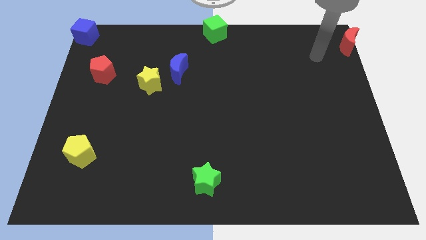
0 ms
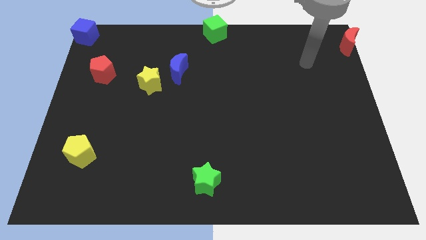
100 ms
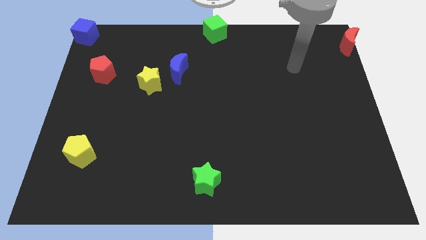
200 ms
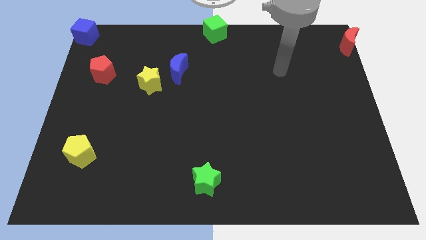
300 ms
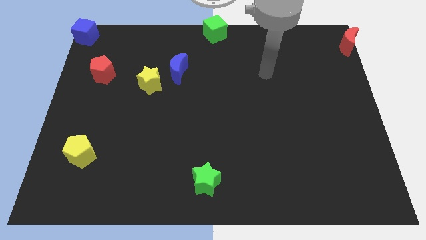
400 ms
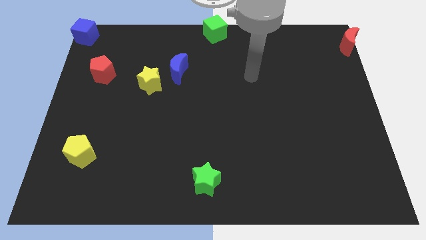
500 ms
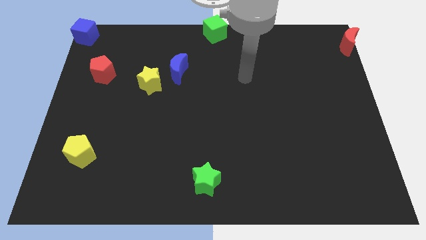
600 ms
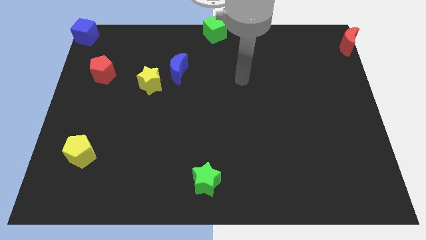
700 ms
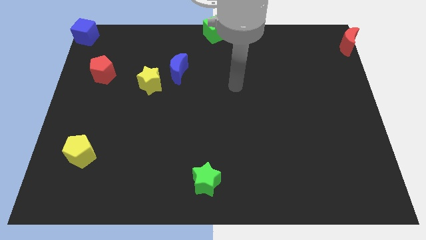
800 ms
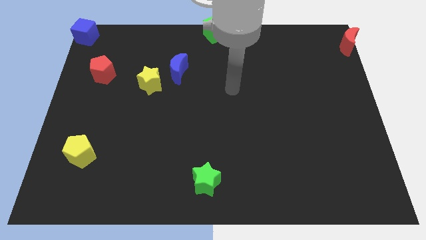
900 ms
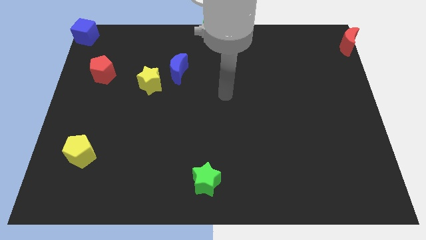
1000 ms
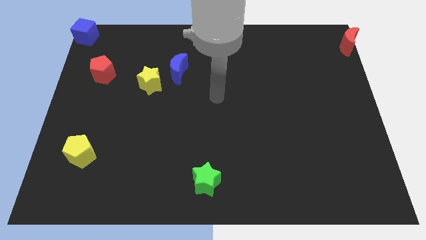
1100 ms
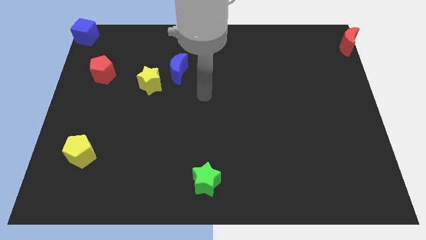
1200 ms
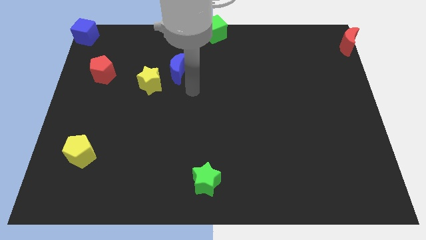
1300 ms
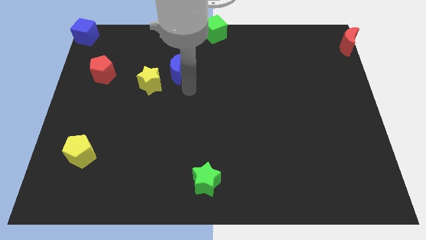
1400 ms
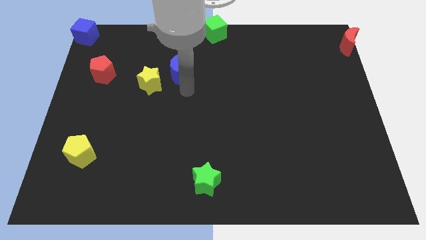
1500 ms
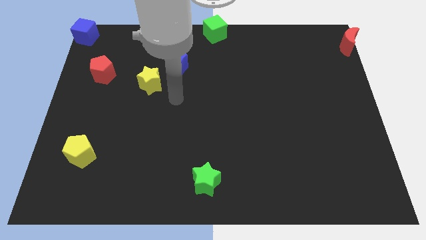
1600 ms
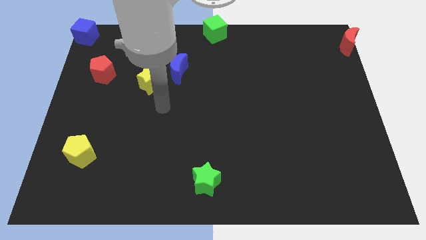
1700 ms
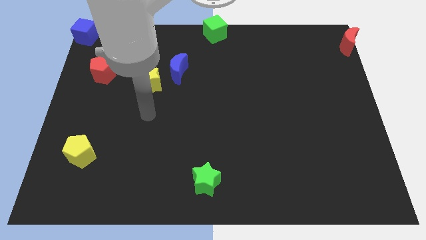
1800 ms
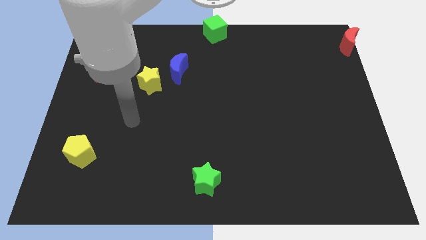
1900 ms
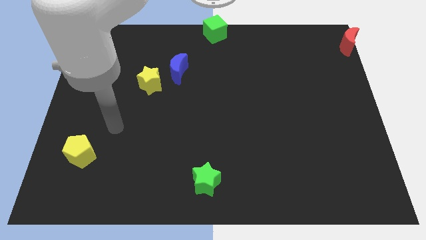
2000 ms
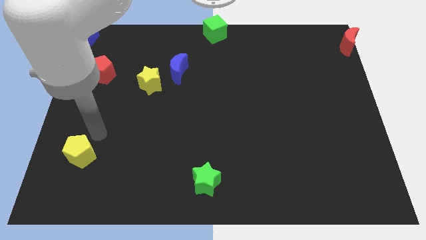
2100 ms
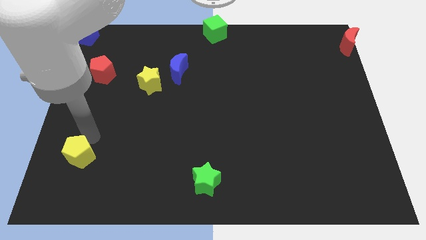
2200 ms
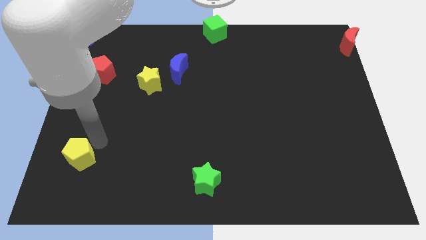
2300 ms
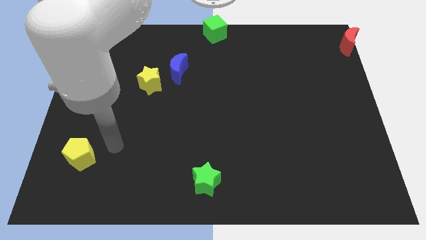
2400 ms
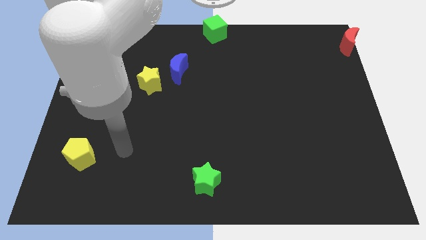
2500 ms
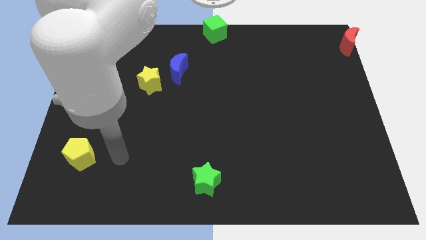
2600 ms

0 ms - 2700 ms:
touch the yellow pentagon

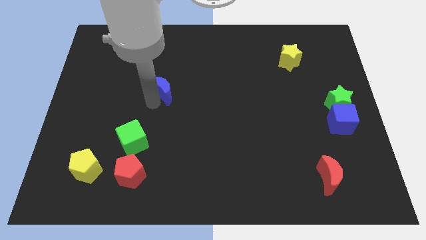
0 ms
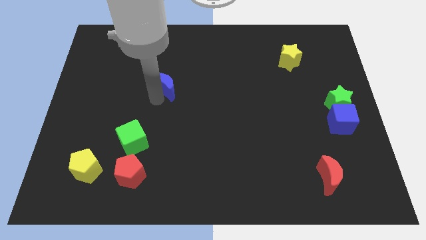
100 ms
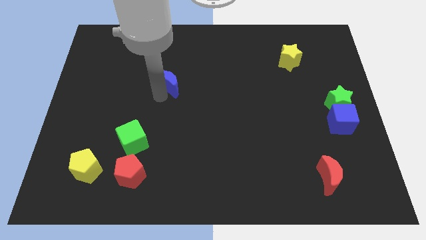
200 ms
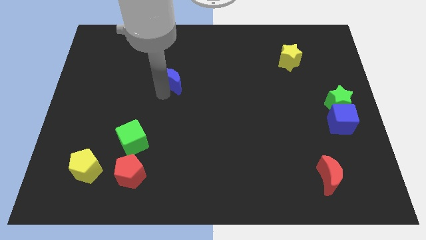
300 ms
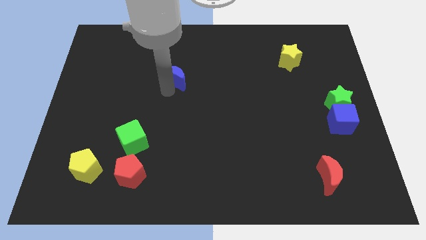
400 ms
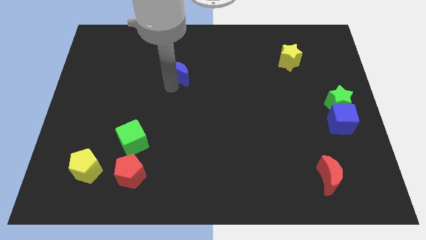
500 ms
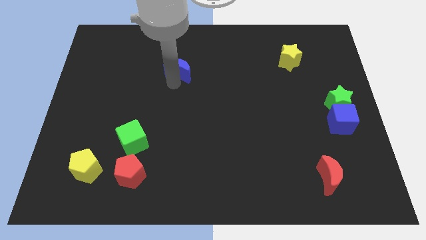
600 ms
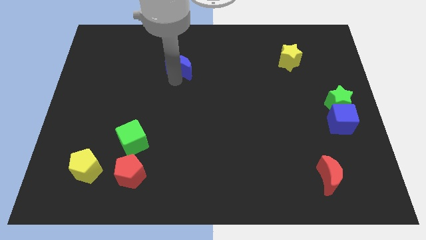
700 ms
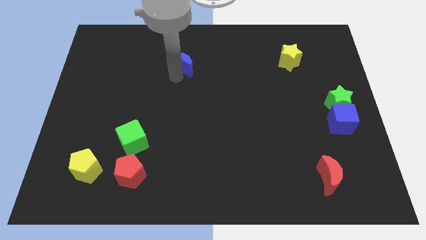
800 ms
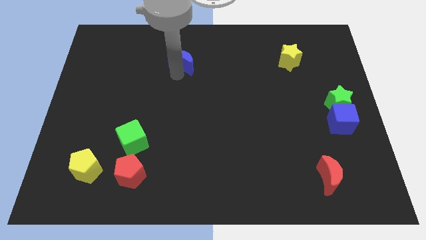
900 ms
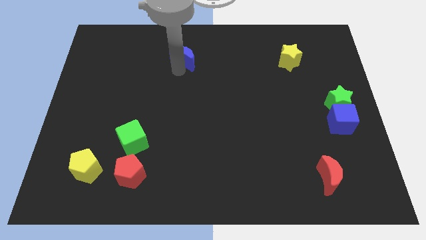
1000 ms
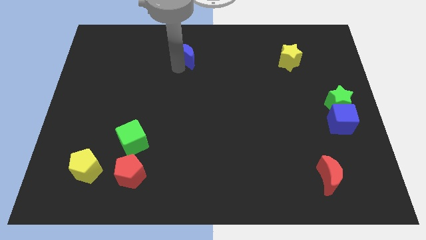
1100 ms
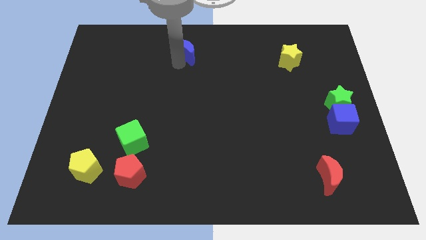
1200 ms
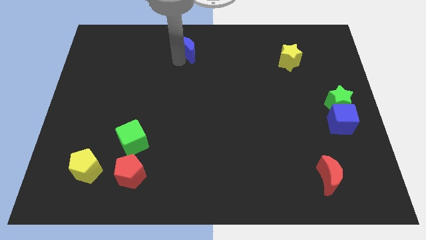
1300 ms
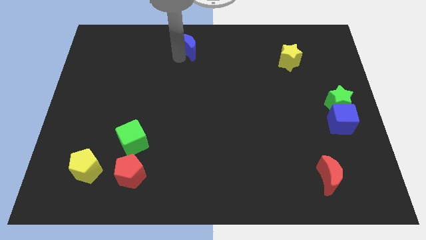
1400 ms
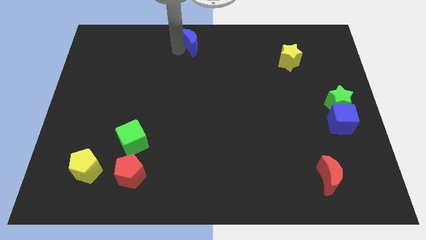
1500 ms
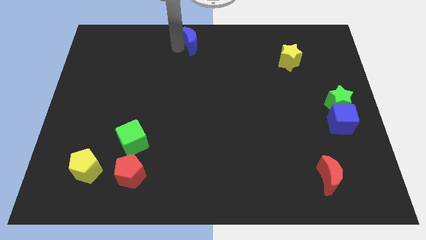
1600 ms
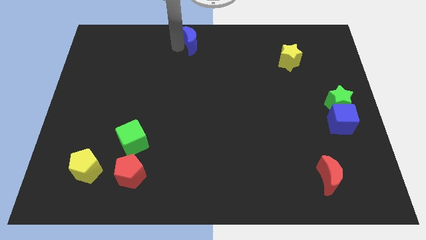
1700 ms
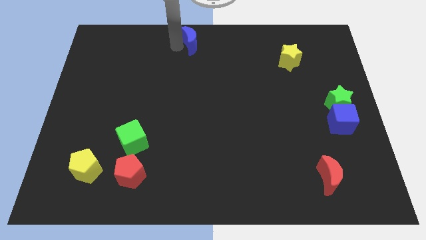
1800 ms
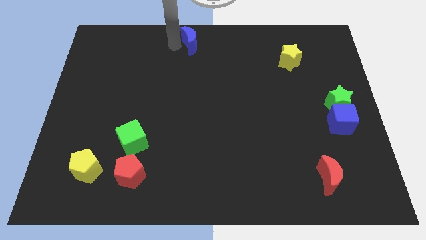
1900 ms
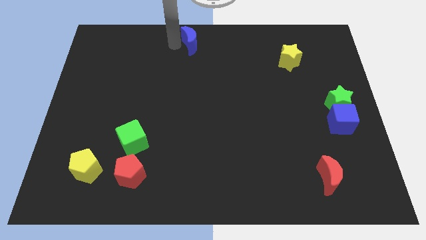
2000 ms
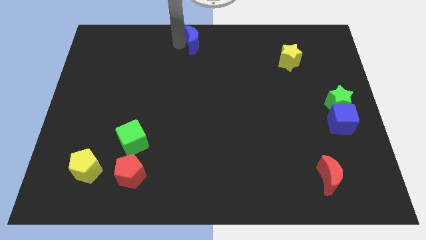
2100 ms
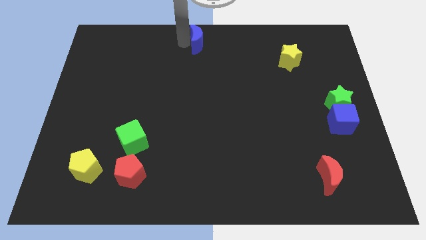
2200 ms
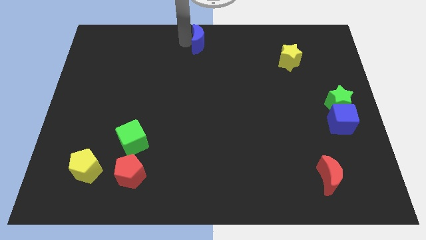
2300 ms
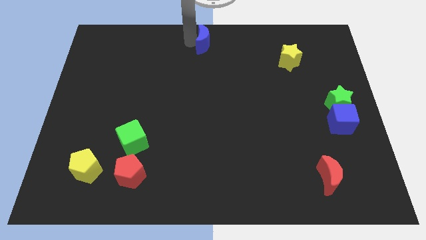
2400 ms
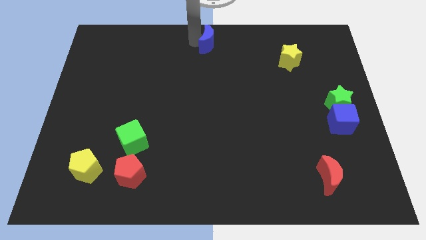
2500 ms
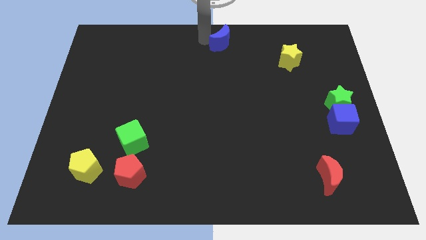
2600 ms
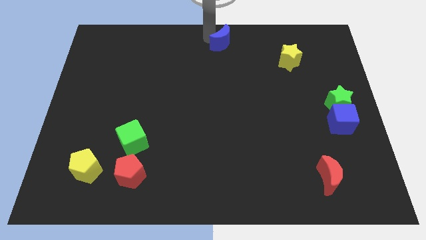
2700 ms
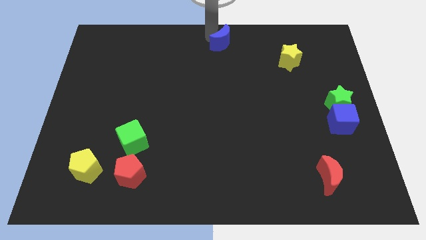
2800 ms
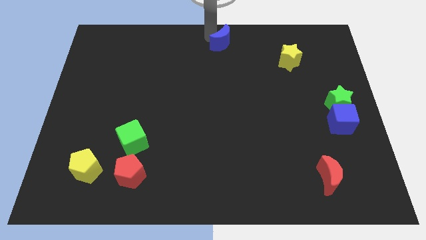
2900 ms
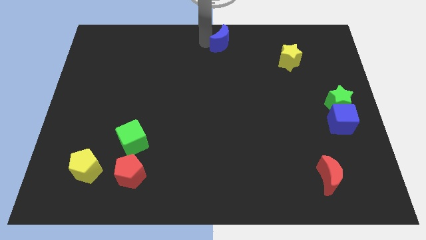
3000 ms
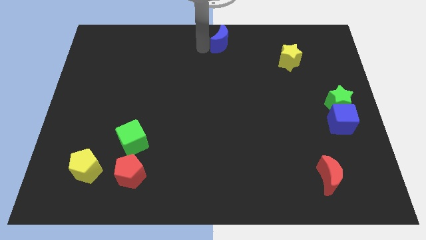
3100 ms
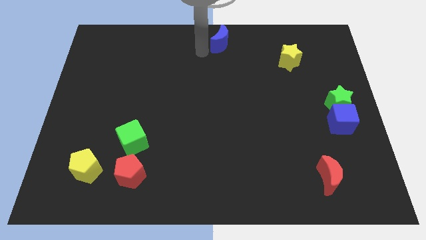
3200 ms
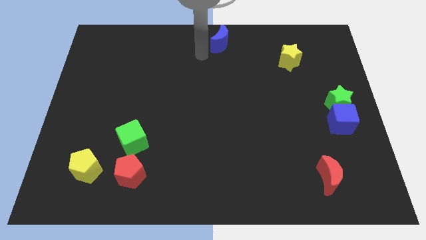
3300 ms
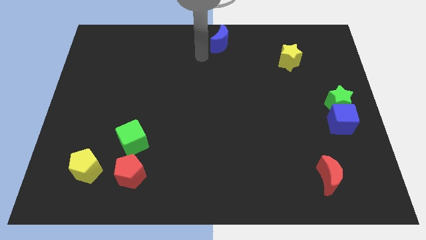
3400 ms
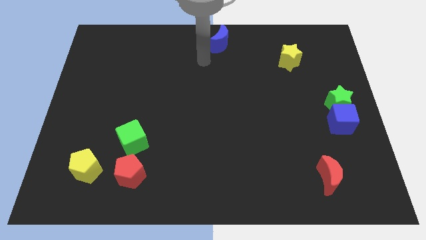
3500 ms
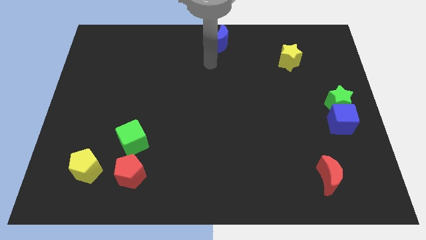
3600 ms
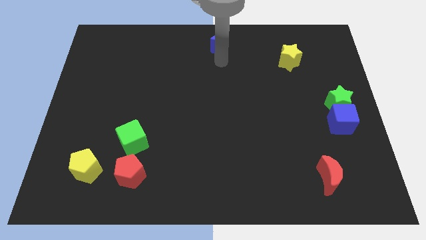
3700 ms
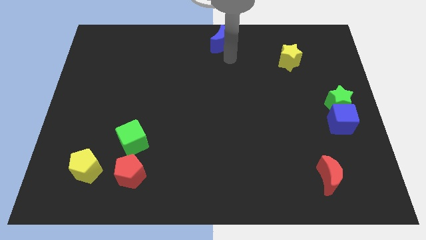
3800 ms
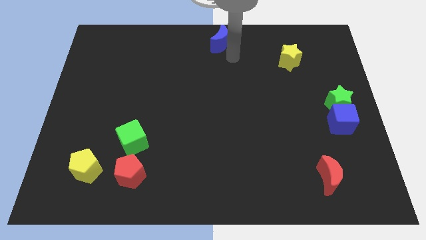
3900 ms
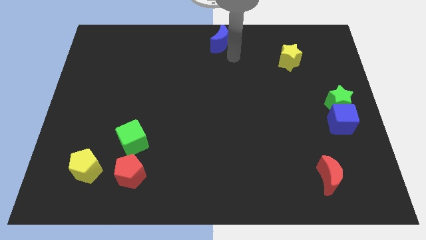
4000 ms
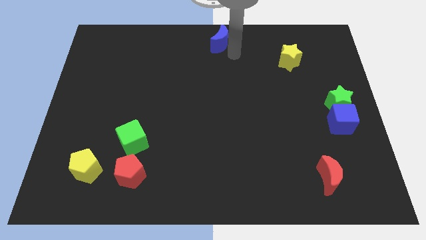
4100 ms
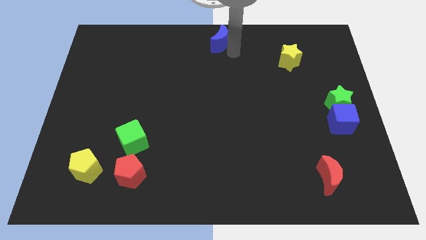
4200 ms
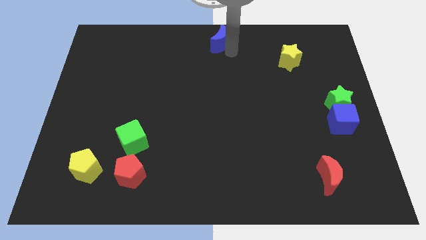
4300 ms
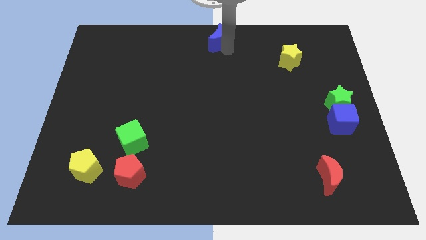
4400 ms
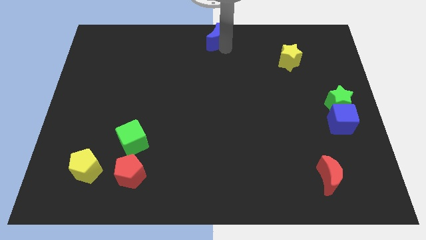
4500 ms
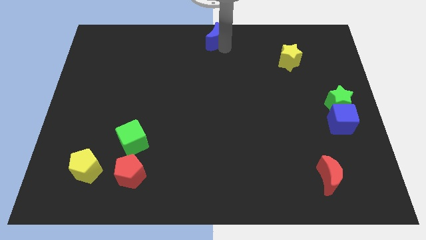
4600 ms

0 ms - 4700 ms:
drag the blue moon to the top center

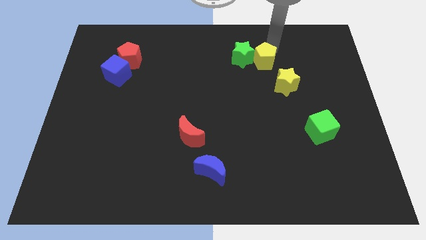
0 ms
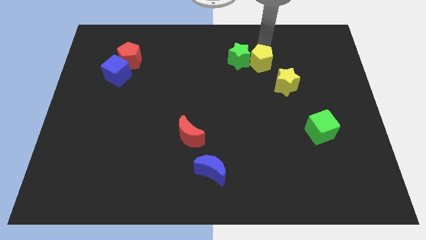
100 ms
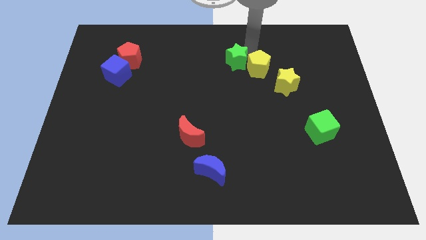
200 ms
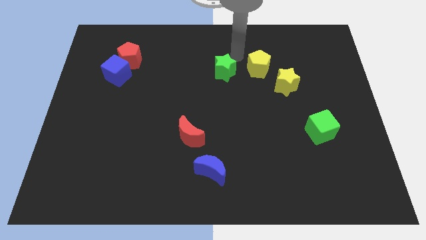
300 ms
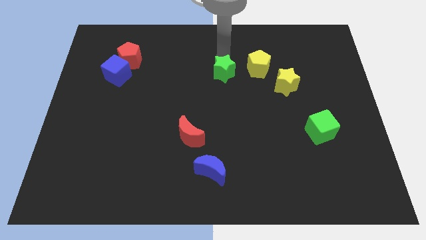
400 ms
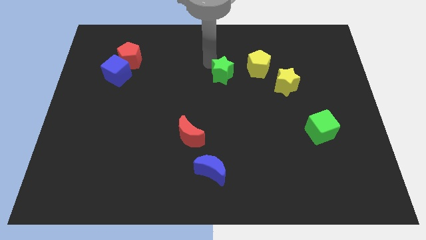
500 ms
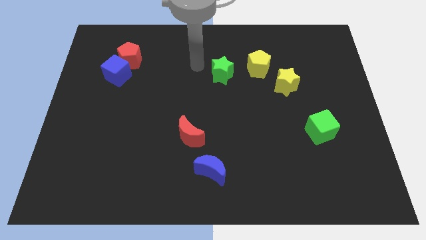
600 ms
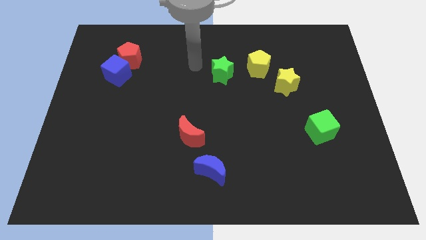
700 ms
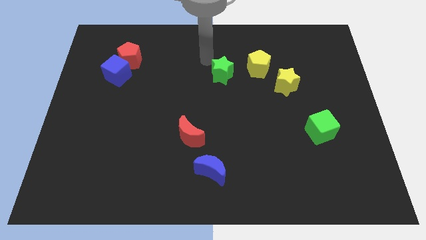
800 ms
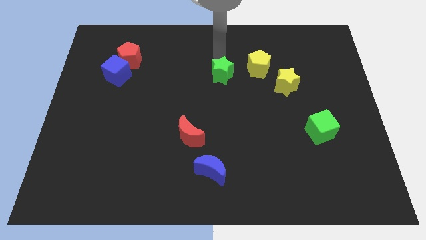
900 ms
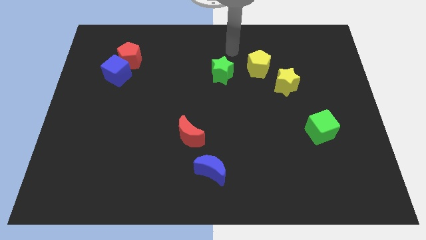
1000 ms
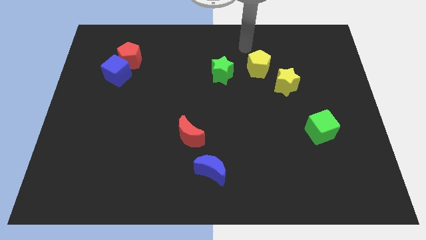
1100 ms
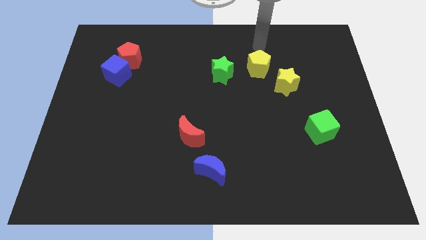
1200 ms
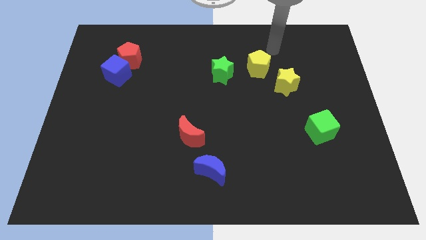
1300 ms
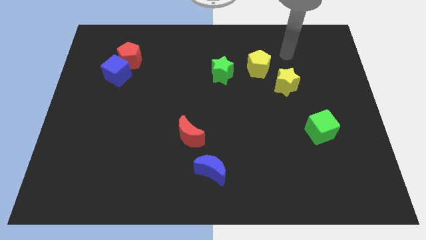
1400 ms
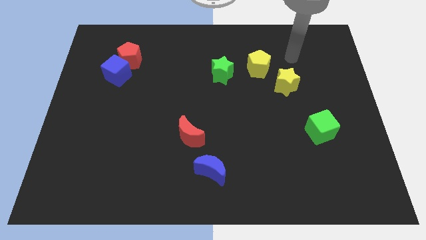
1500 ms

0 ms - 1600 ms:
separate the green star from the yellow pentagon
